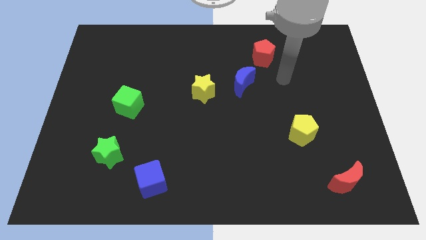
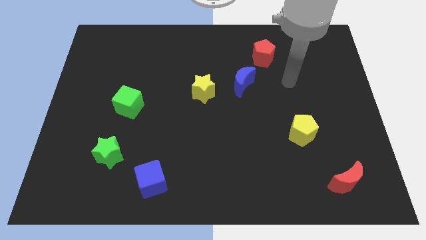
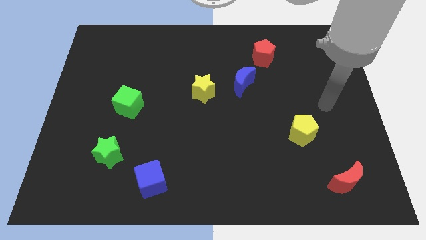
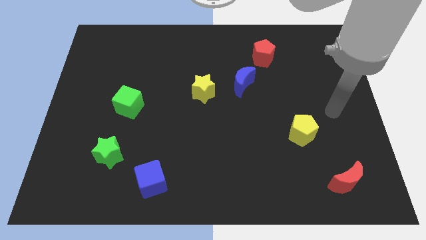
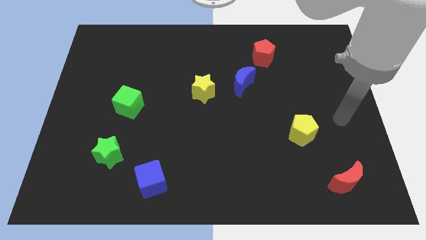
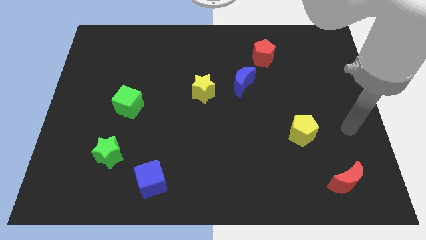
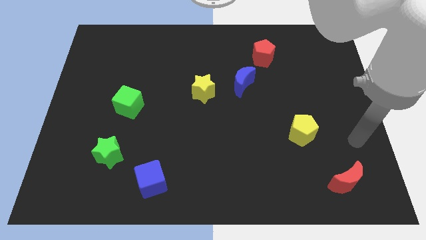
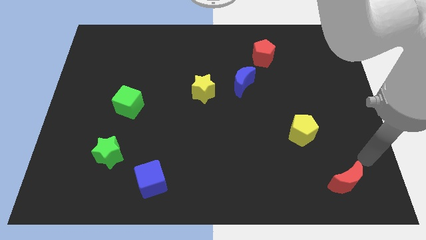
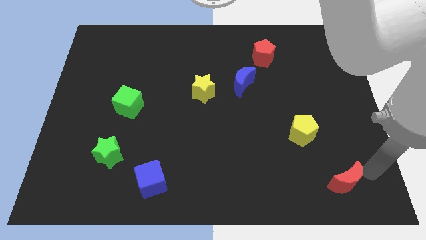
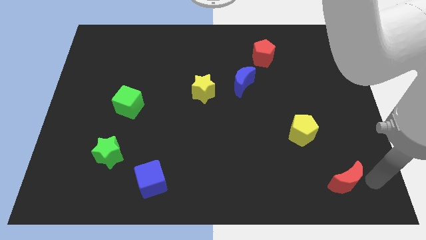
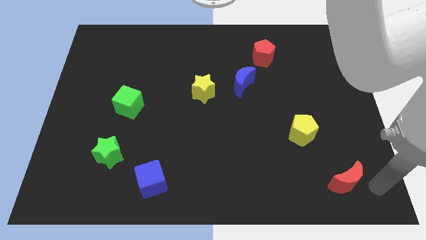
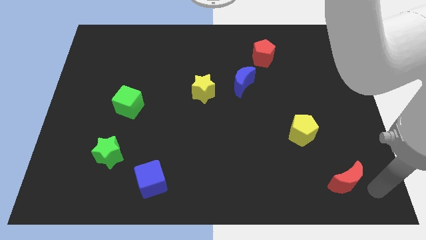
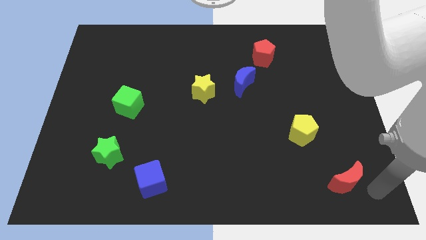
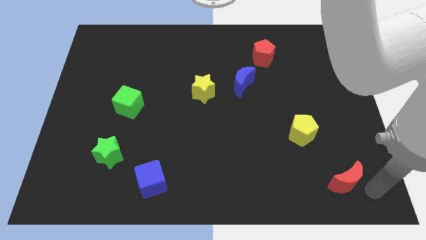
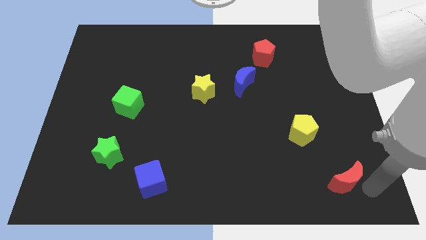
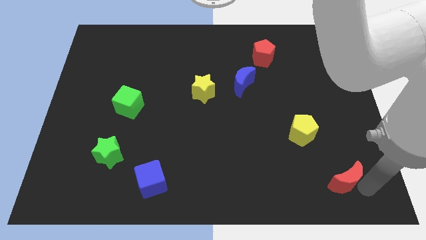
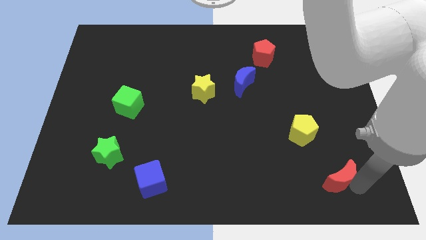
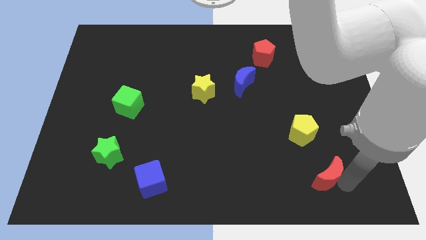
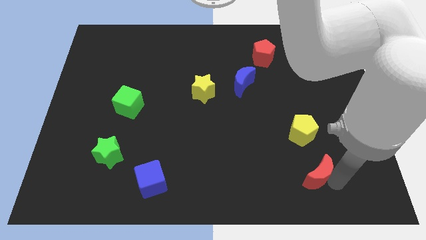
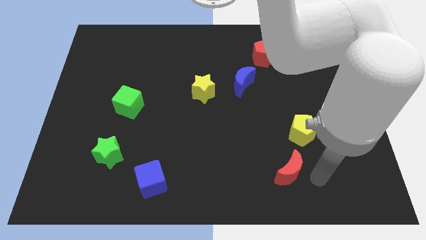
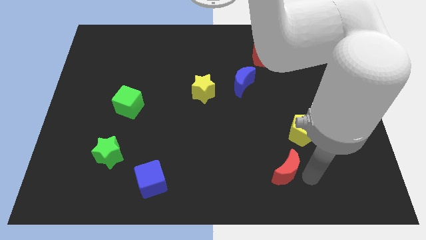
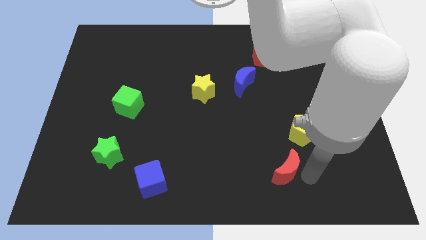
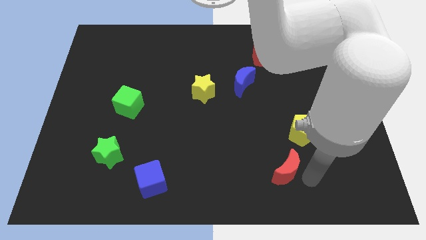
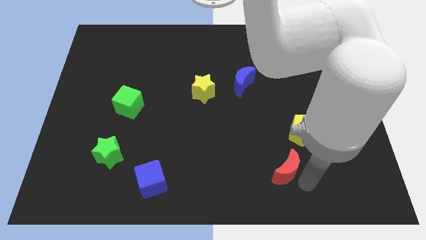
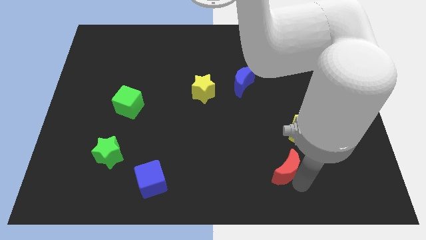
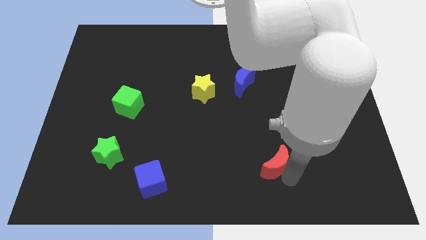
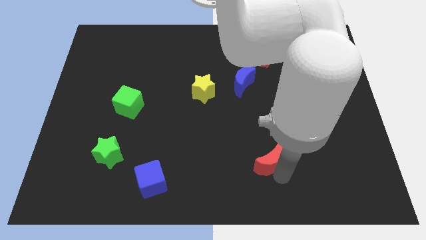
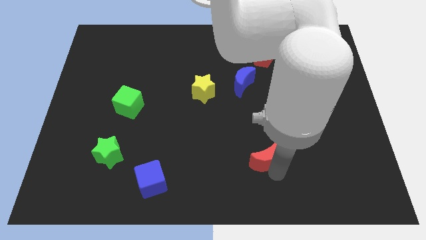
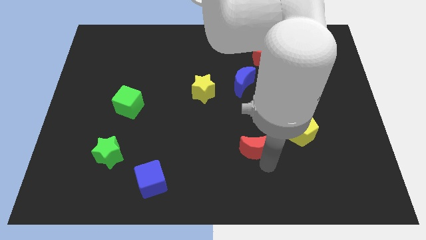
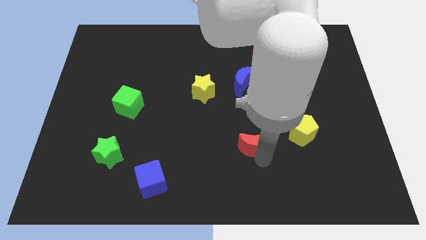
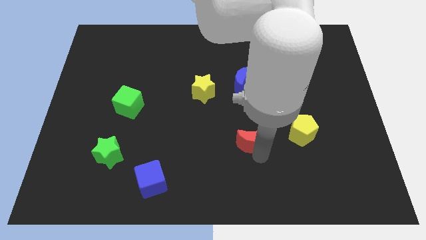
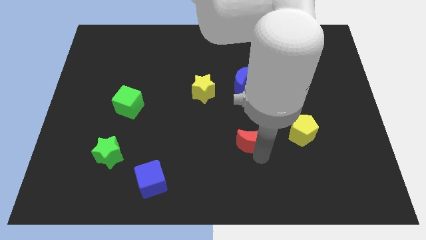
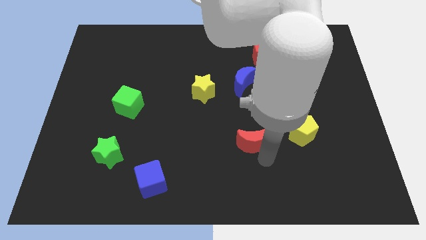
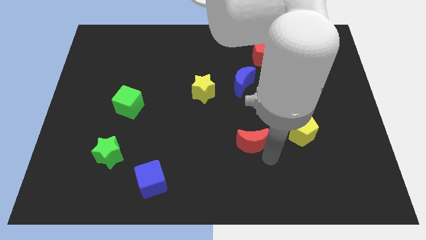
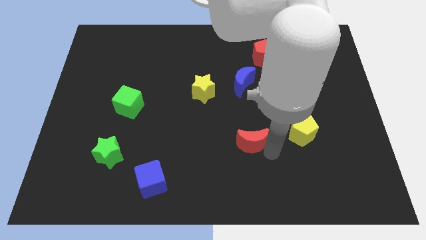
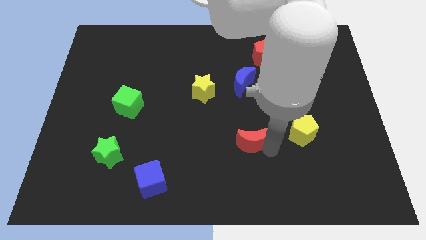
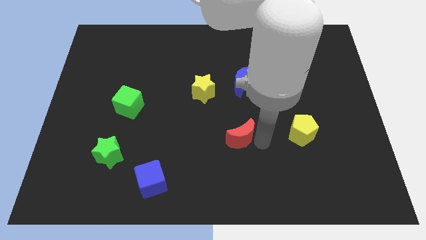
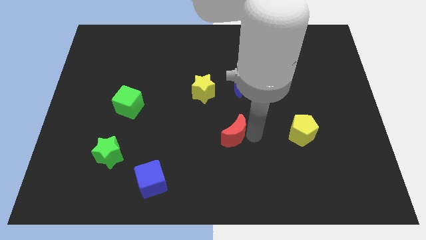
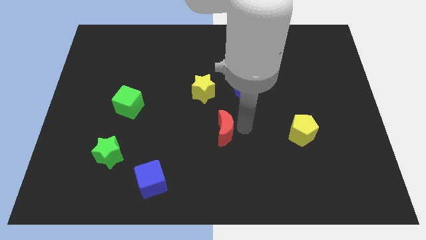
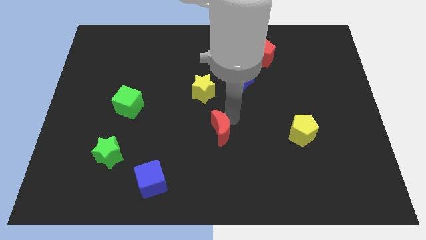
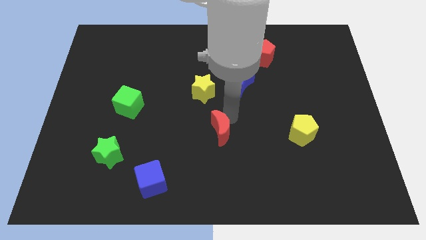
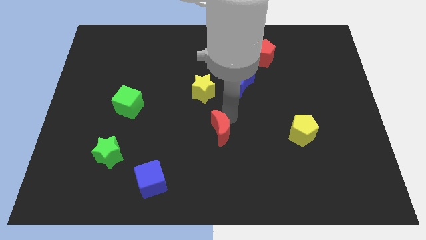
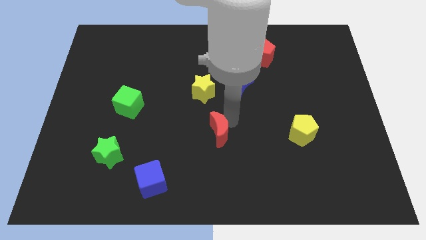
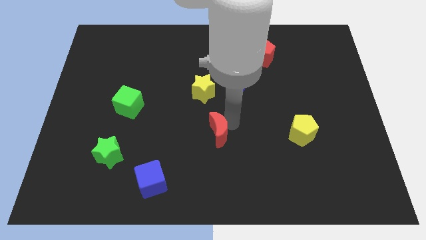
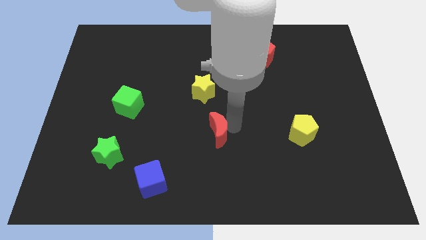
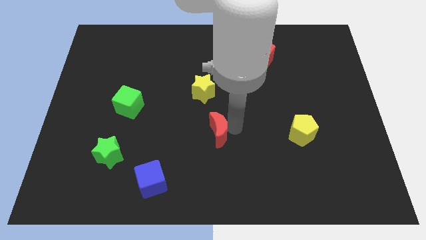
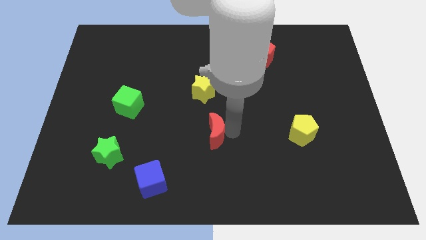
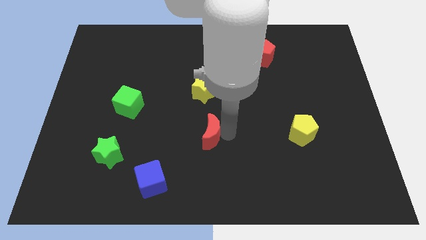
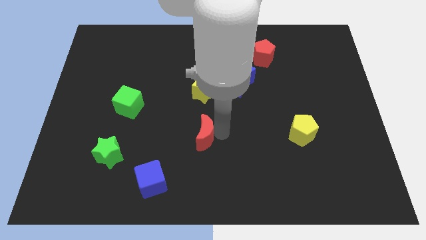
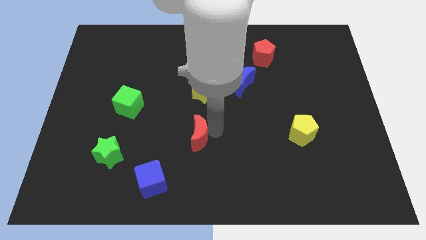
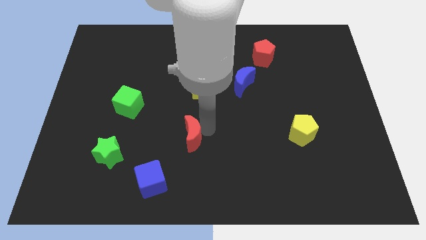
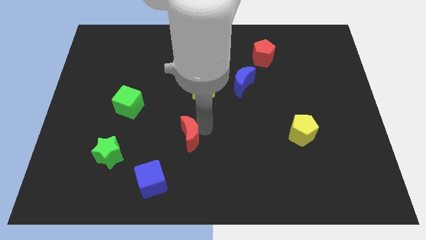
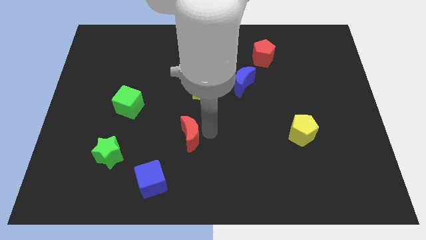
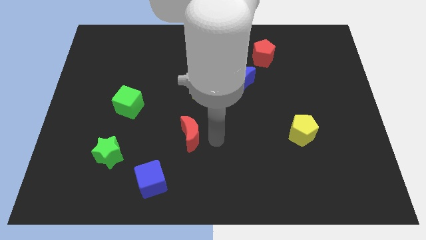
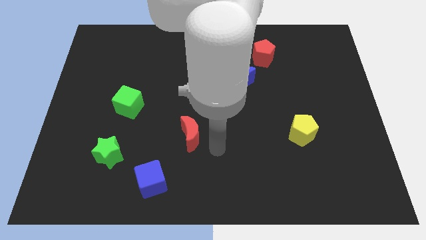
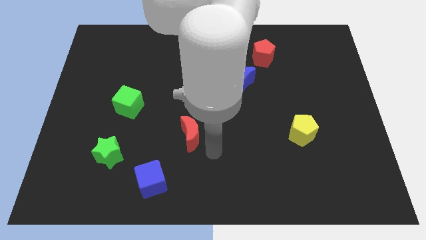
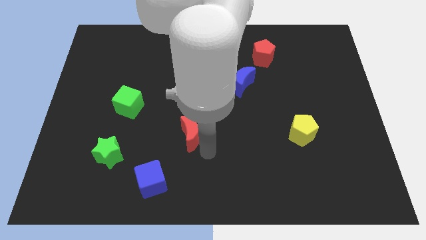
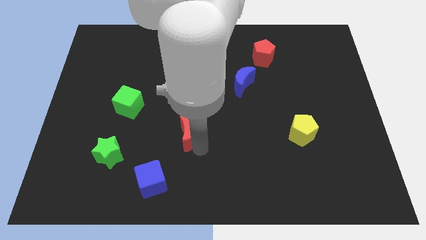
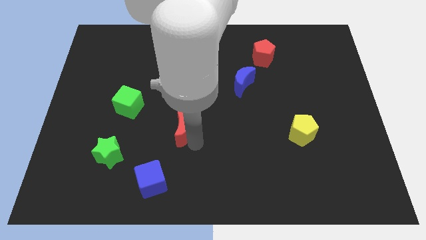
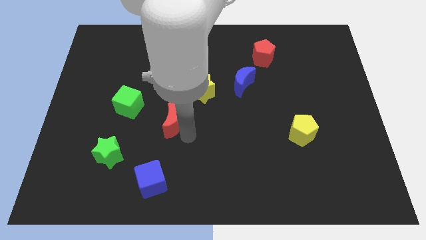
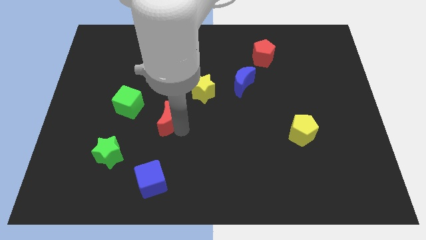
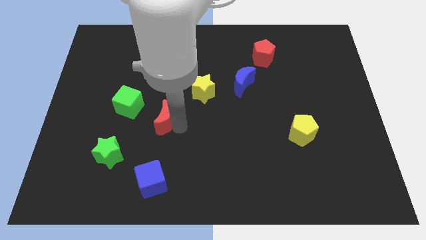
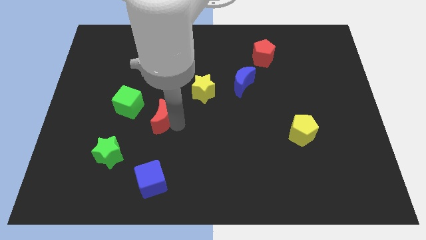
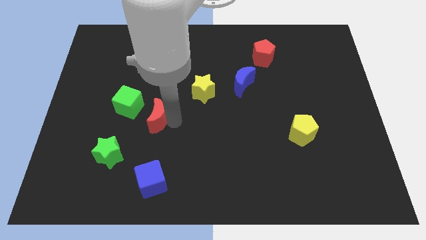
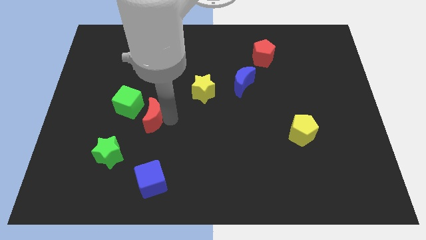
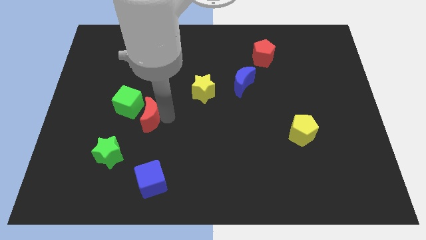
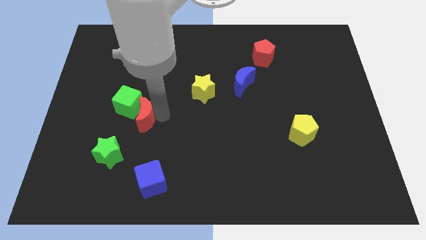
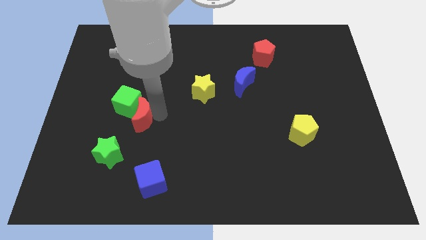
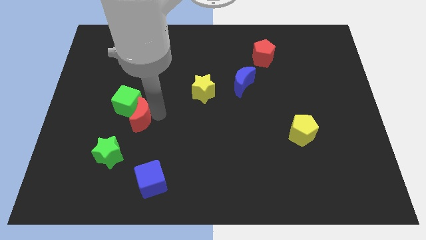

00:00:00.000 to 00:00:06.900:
move the red moon to the green cube

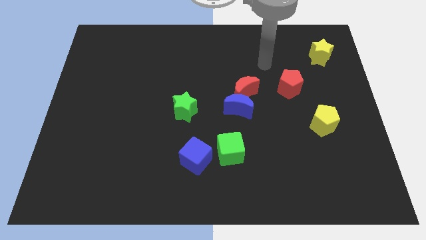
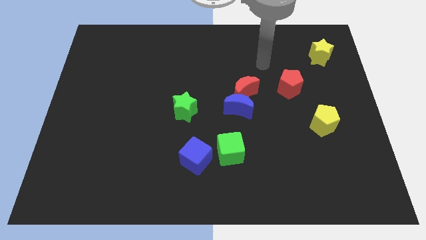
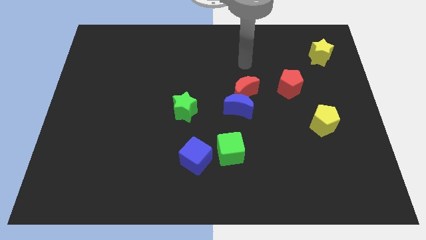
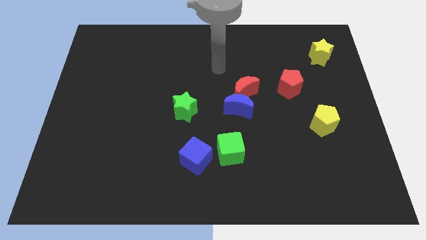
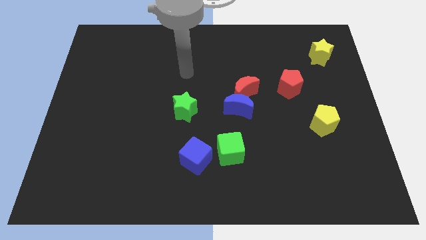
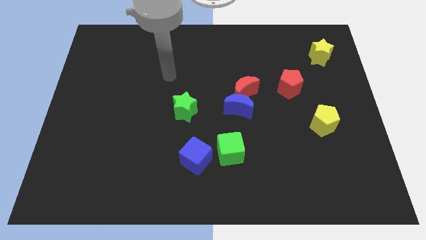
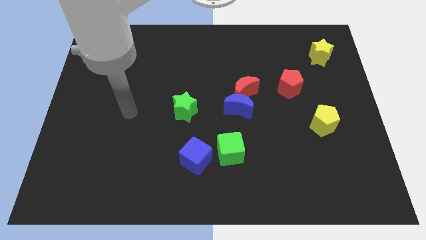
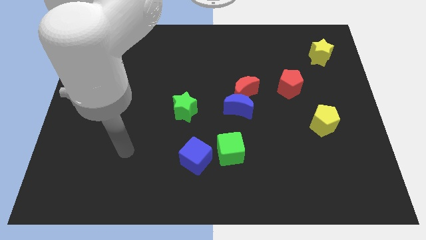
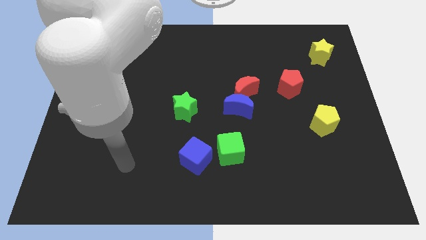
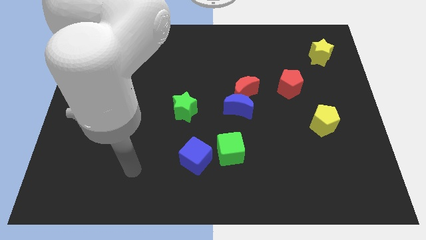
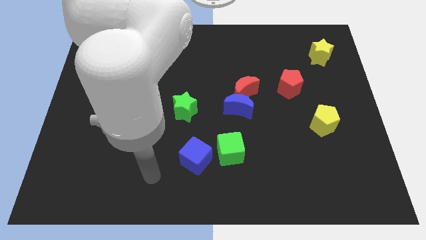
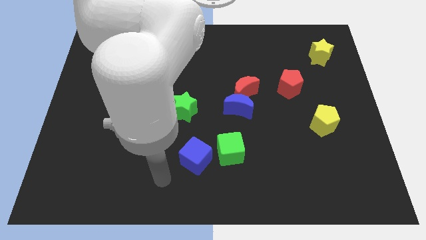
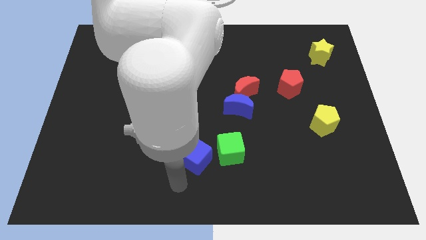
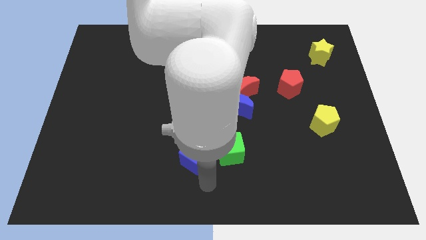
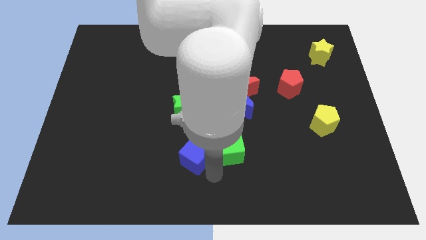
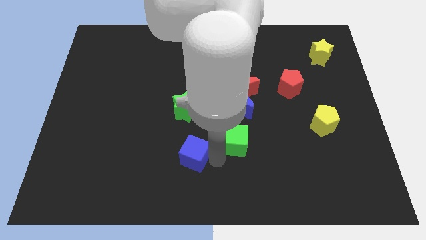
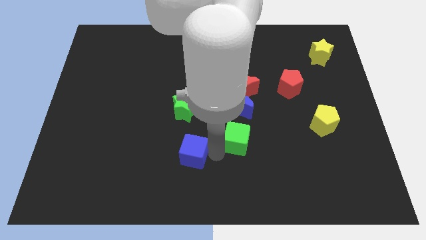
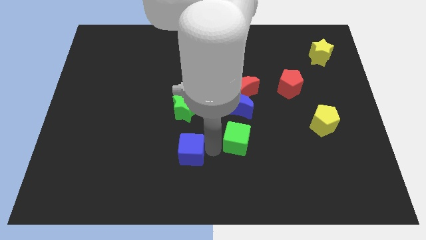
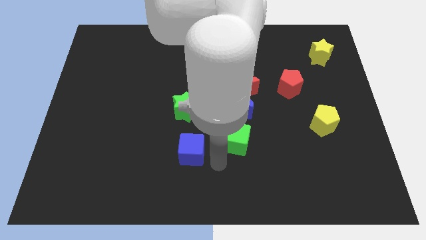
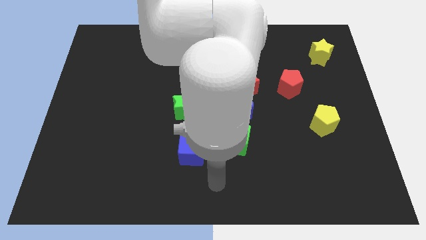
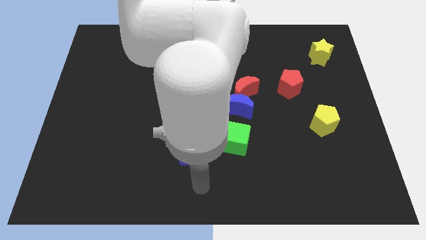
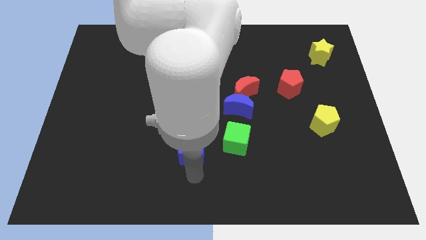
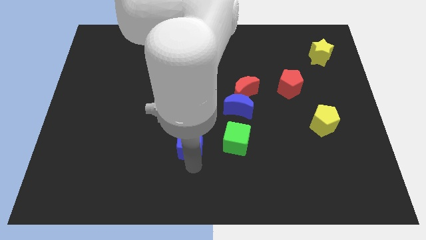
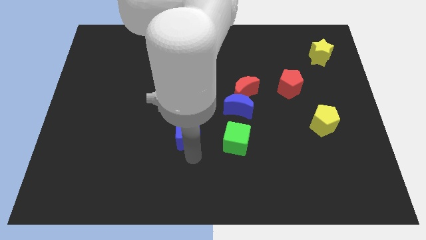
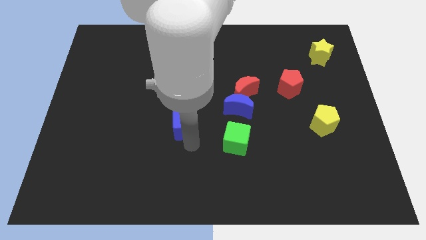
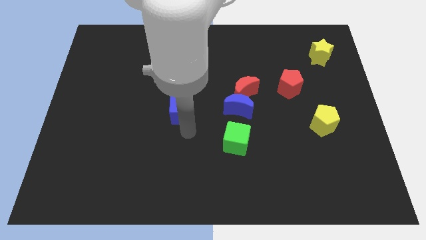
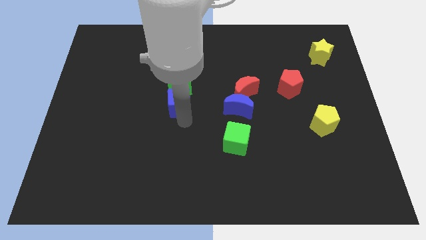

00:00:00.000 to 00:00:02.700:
move the blue cube next to the green star
